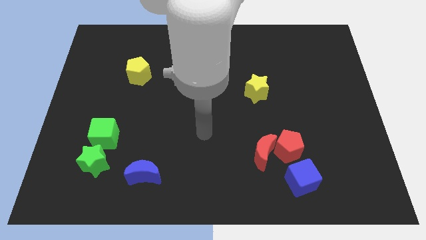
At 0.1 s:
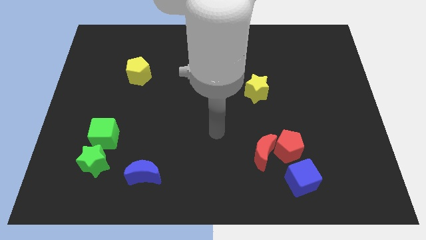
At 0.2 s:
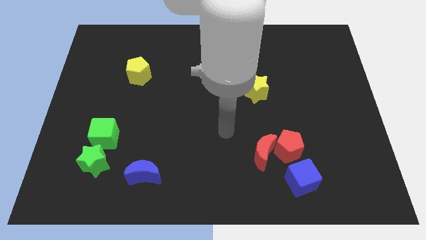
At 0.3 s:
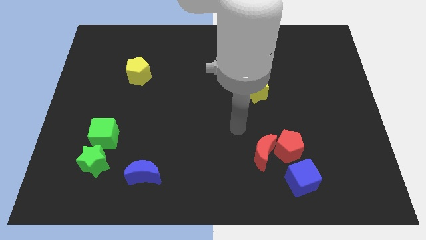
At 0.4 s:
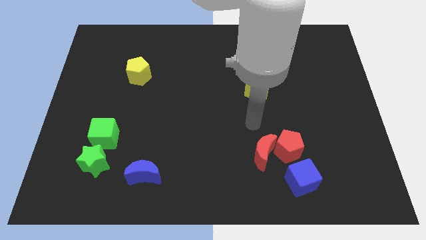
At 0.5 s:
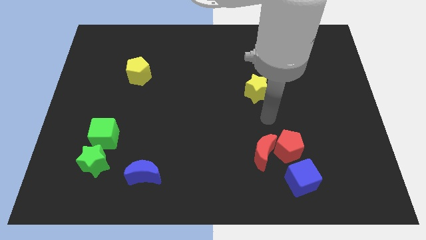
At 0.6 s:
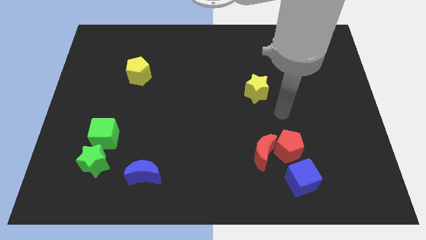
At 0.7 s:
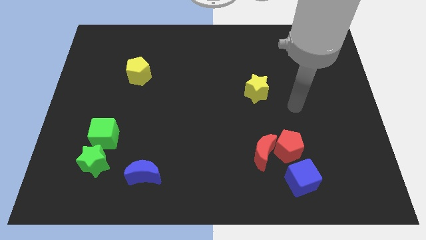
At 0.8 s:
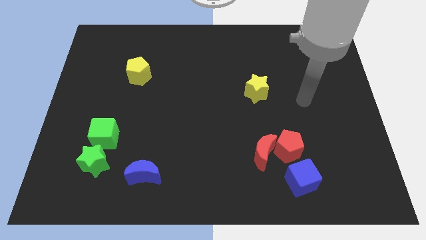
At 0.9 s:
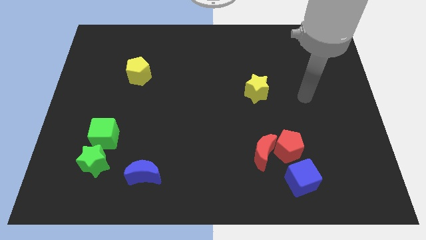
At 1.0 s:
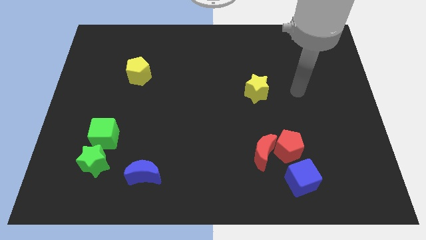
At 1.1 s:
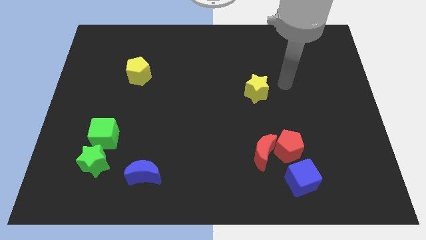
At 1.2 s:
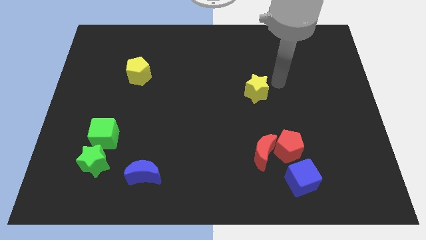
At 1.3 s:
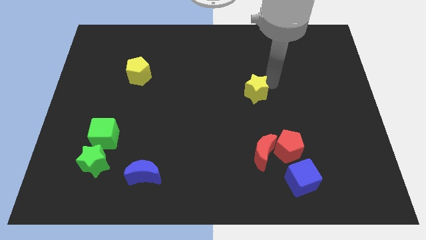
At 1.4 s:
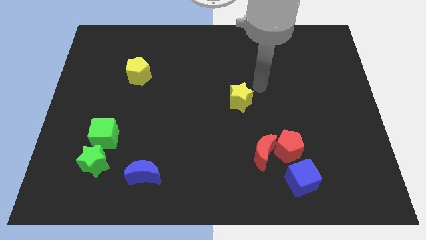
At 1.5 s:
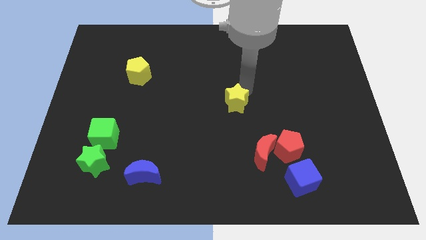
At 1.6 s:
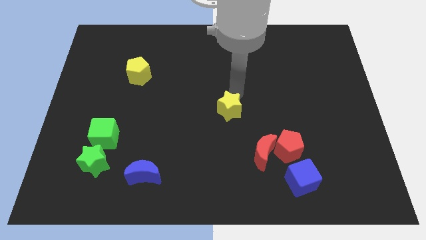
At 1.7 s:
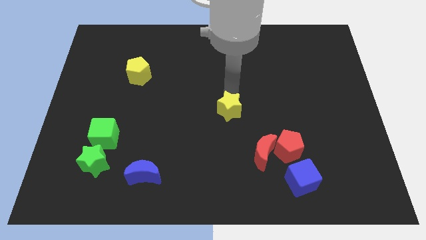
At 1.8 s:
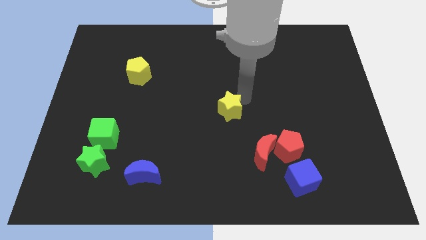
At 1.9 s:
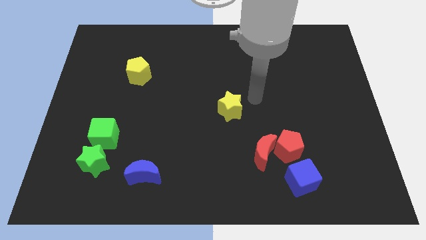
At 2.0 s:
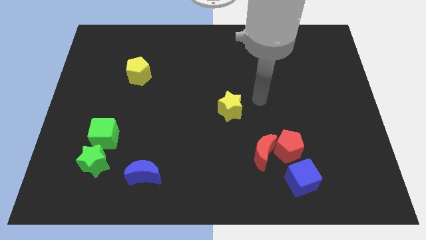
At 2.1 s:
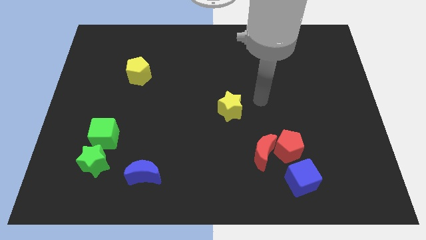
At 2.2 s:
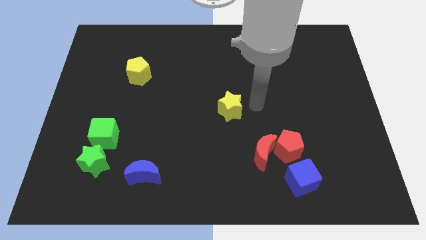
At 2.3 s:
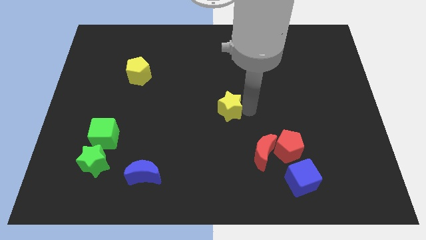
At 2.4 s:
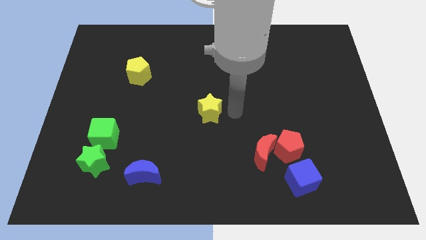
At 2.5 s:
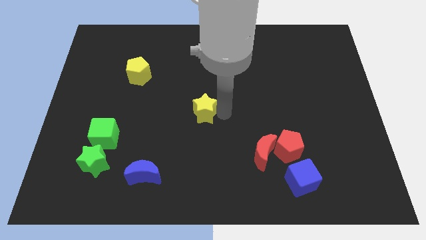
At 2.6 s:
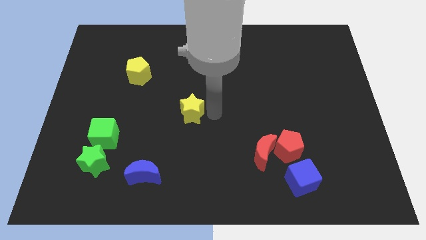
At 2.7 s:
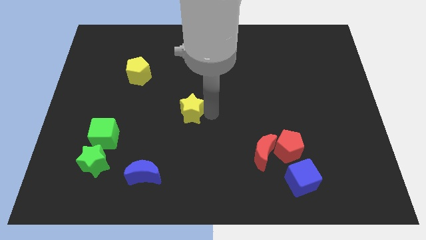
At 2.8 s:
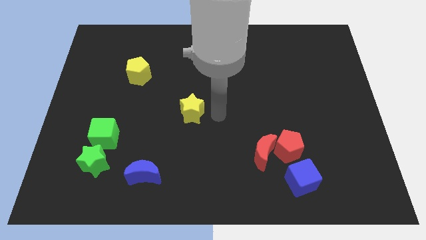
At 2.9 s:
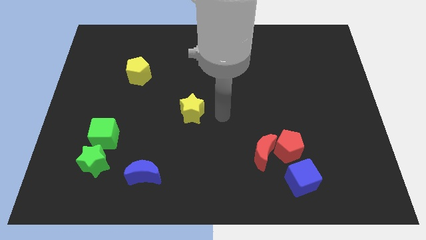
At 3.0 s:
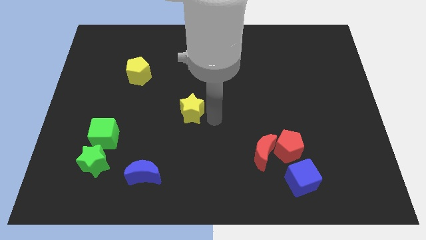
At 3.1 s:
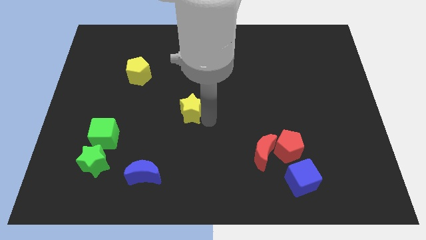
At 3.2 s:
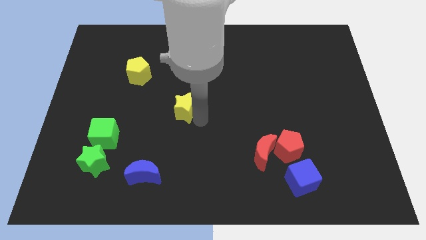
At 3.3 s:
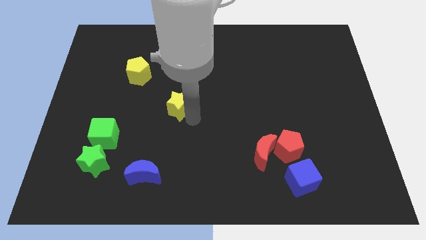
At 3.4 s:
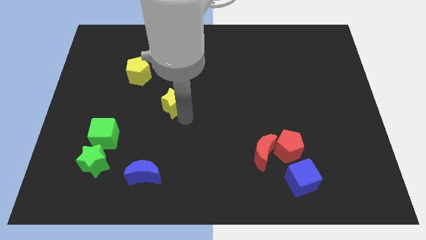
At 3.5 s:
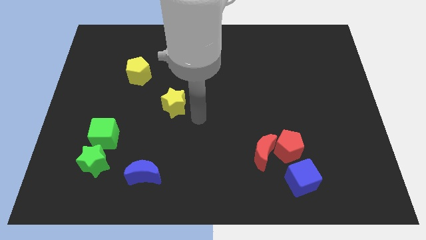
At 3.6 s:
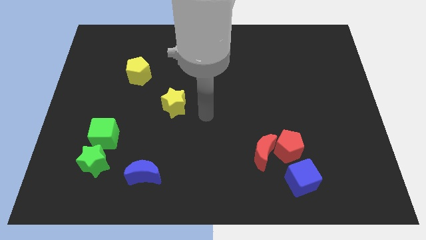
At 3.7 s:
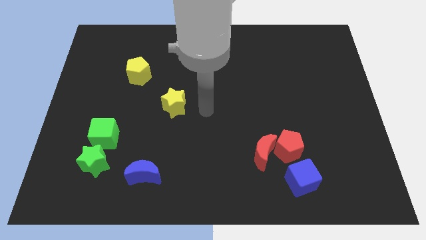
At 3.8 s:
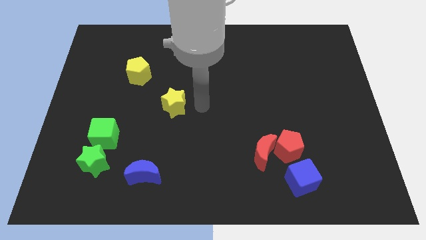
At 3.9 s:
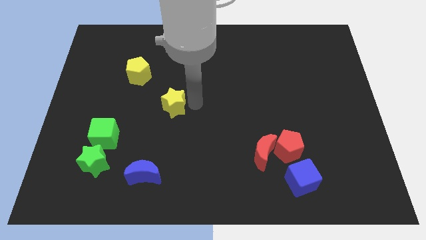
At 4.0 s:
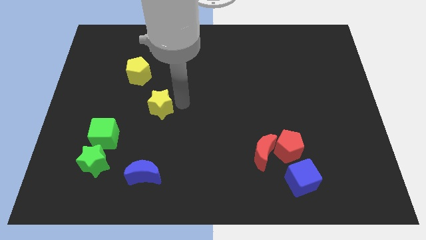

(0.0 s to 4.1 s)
push the yellow star towards the left side of the board

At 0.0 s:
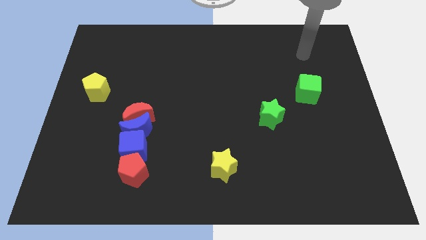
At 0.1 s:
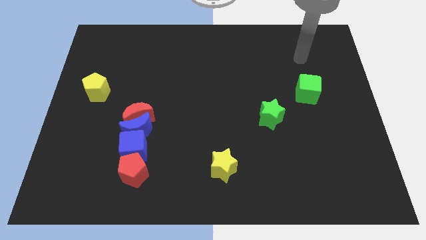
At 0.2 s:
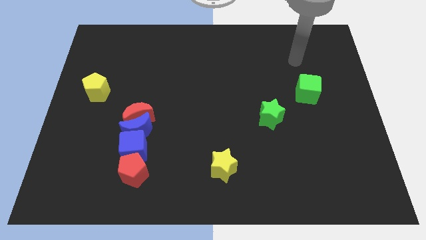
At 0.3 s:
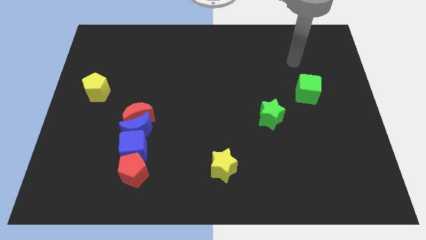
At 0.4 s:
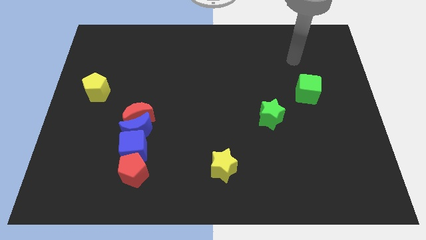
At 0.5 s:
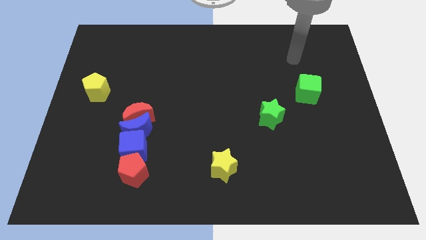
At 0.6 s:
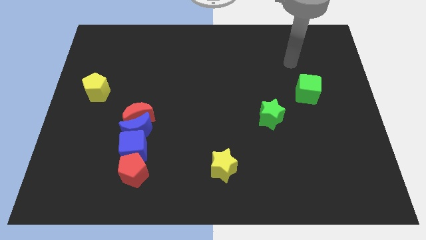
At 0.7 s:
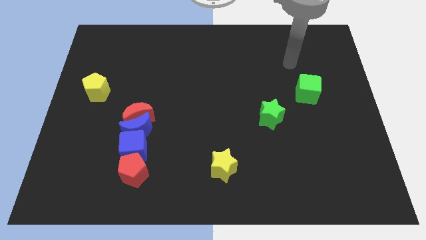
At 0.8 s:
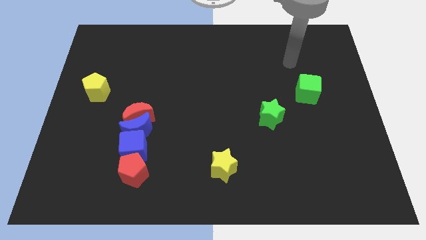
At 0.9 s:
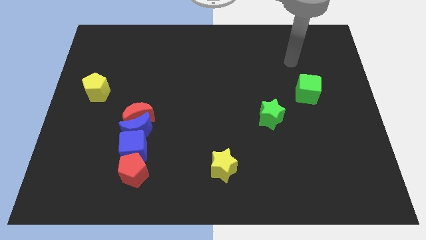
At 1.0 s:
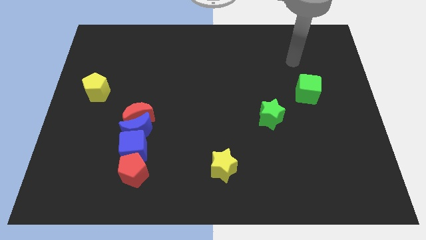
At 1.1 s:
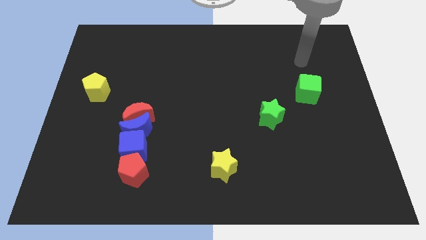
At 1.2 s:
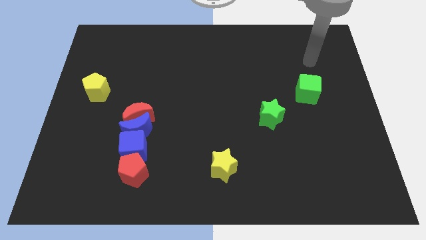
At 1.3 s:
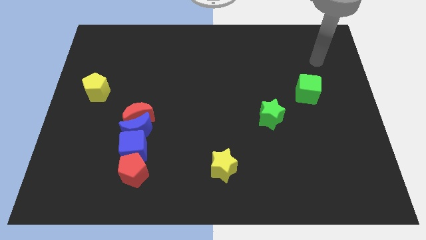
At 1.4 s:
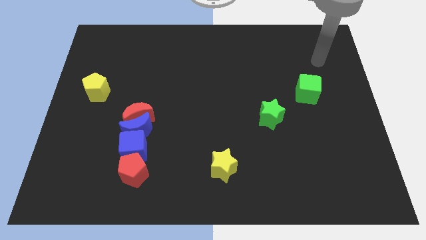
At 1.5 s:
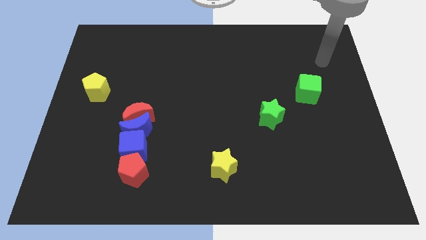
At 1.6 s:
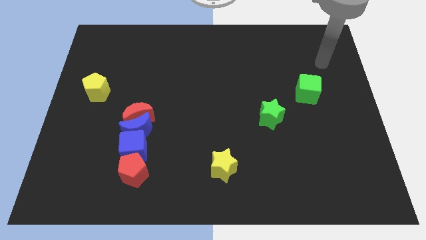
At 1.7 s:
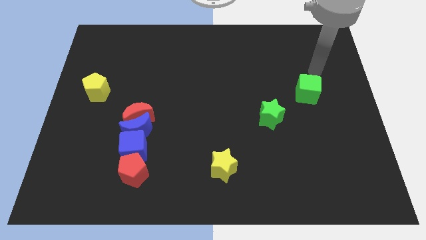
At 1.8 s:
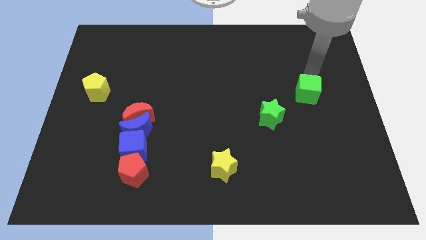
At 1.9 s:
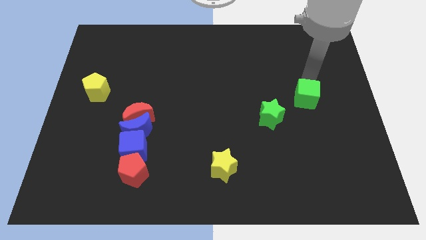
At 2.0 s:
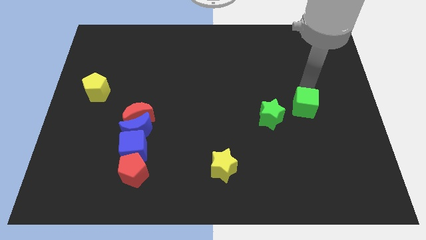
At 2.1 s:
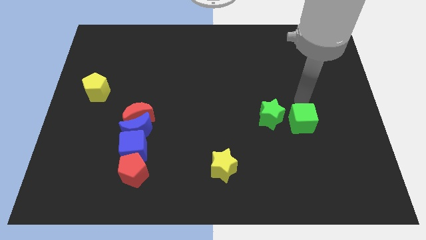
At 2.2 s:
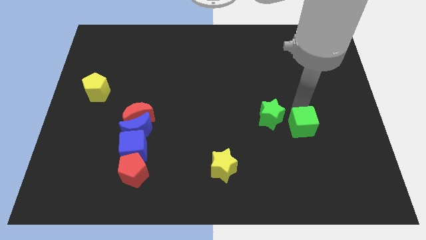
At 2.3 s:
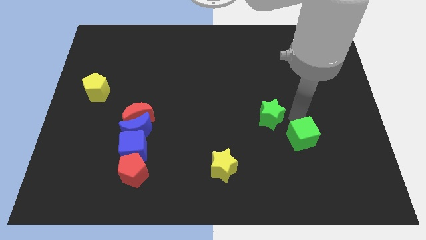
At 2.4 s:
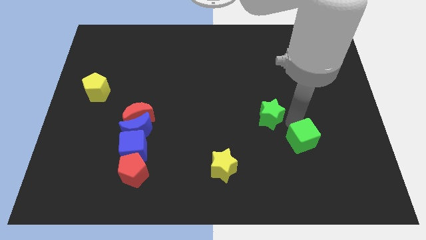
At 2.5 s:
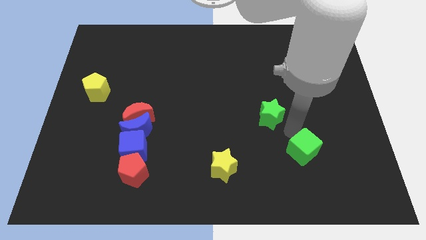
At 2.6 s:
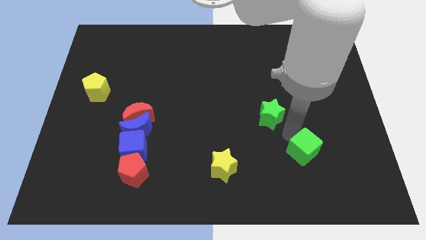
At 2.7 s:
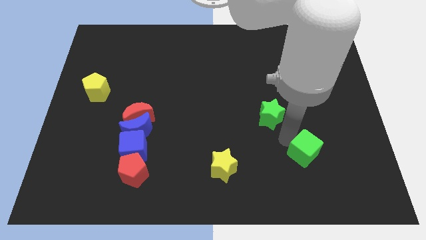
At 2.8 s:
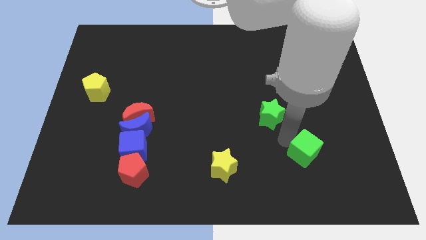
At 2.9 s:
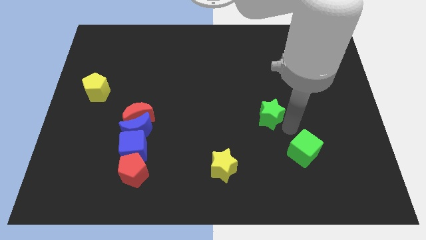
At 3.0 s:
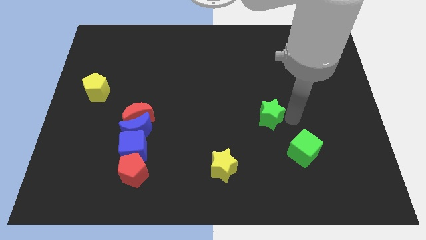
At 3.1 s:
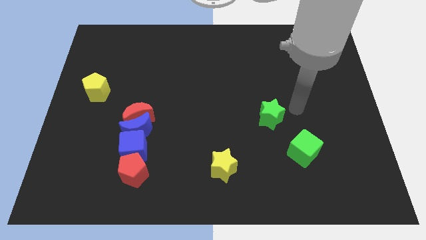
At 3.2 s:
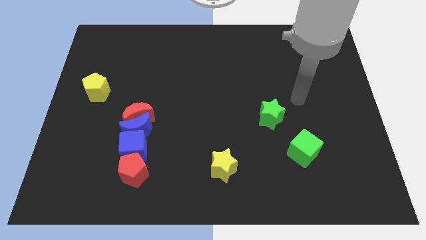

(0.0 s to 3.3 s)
place the green cube at the bottom right side of the green star

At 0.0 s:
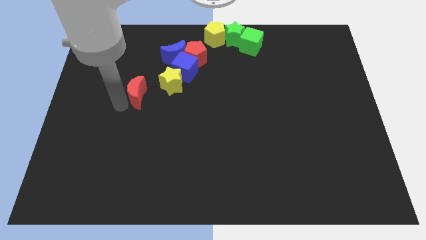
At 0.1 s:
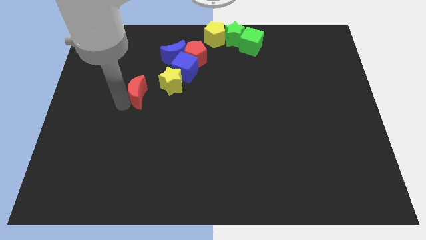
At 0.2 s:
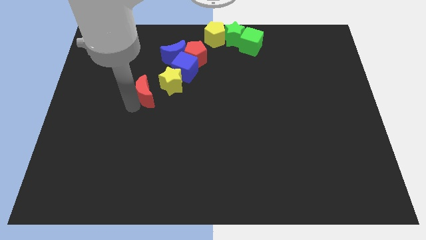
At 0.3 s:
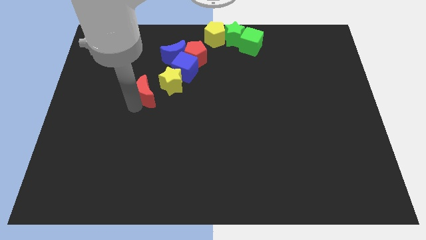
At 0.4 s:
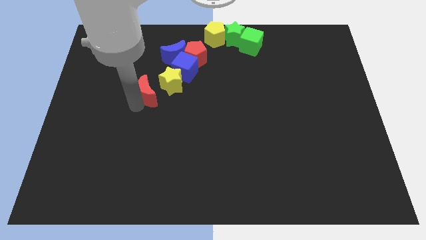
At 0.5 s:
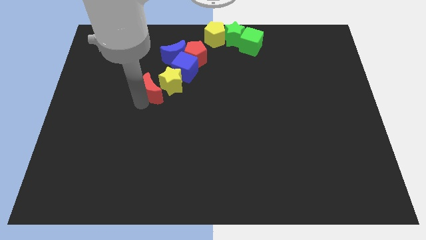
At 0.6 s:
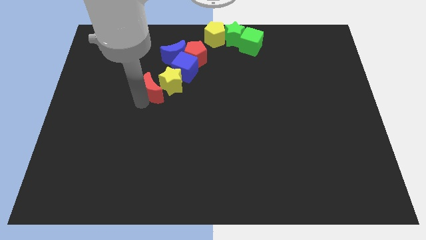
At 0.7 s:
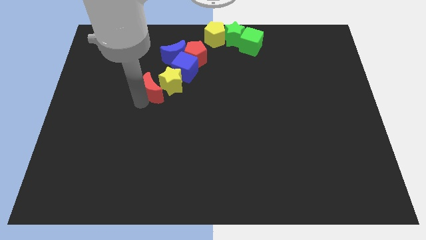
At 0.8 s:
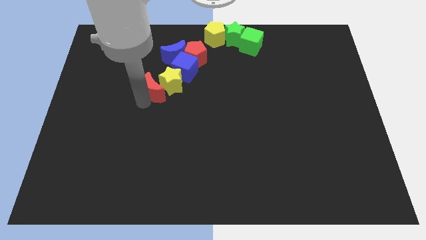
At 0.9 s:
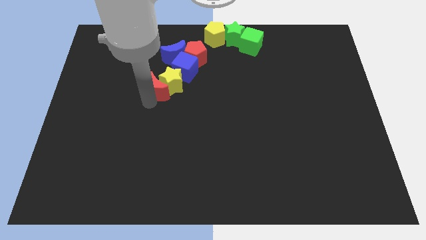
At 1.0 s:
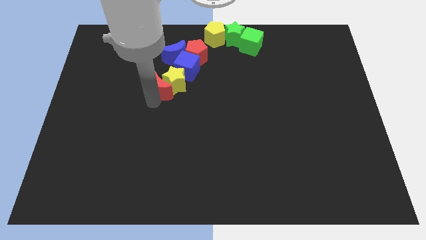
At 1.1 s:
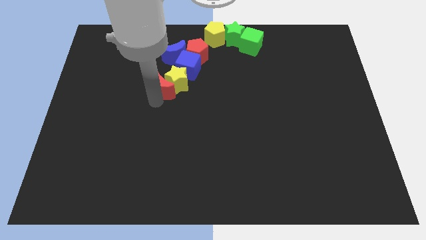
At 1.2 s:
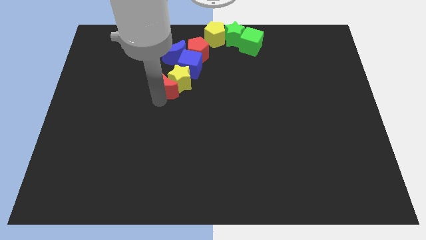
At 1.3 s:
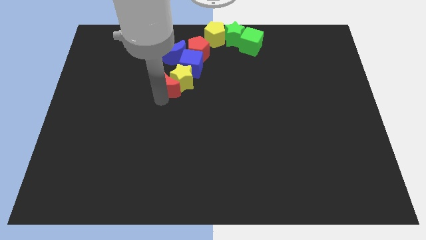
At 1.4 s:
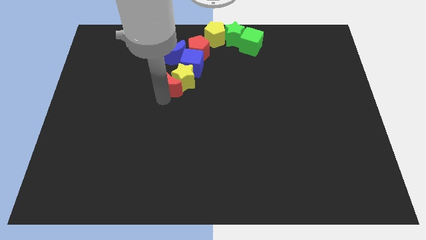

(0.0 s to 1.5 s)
move the red crescent into the yellow star
